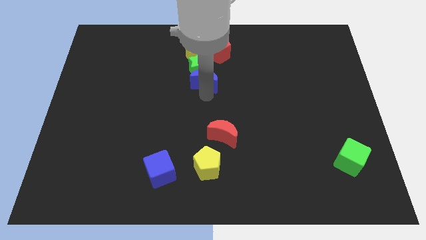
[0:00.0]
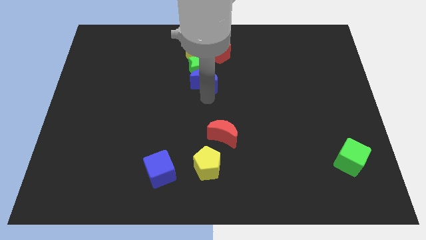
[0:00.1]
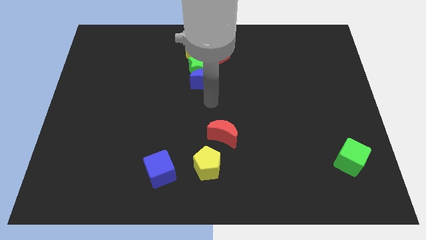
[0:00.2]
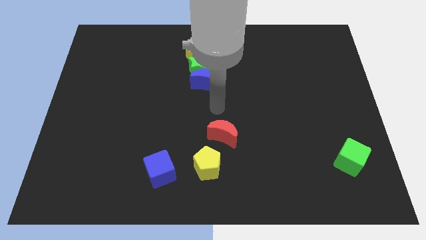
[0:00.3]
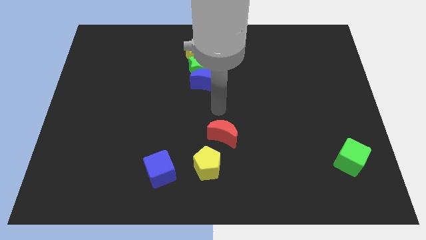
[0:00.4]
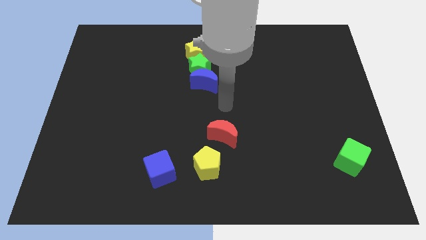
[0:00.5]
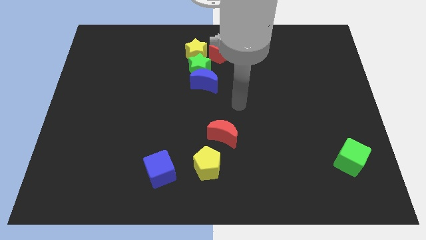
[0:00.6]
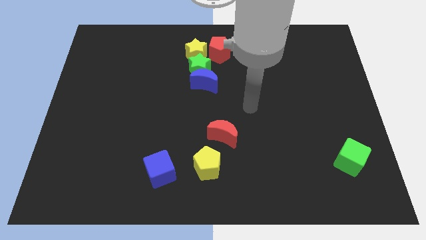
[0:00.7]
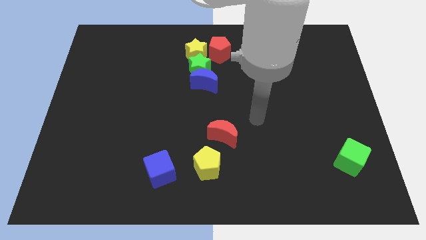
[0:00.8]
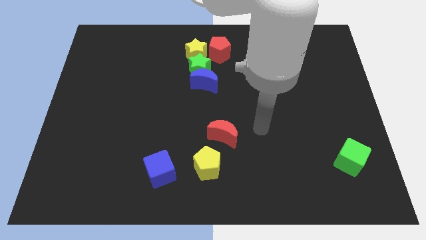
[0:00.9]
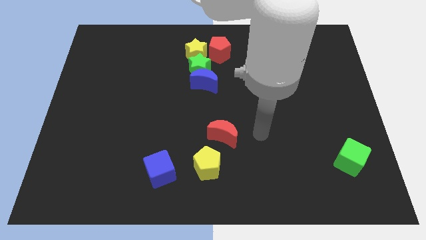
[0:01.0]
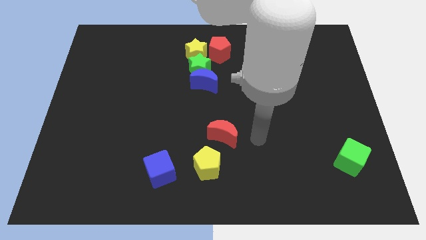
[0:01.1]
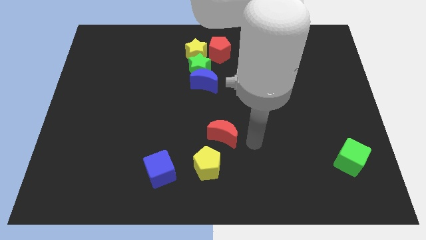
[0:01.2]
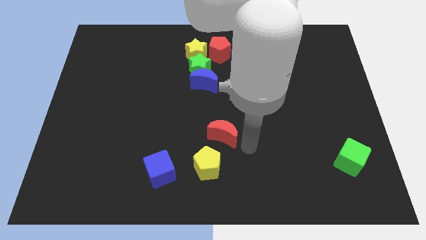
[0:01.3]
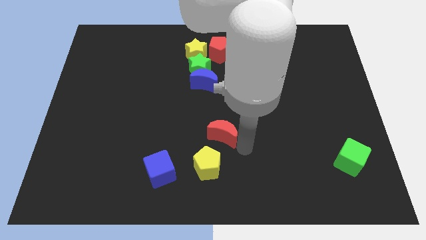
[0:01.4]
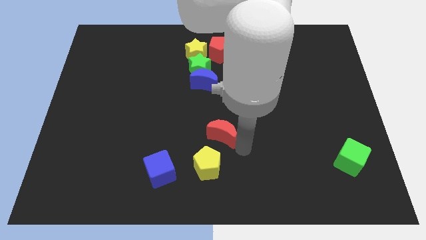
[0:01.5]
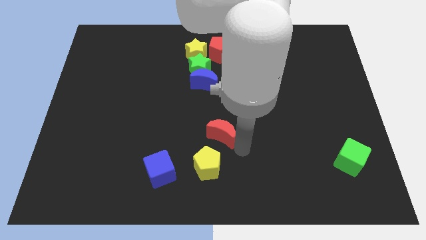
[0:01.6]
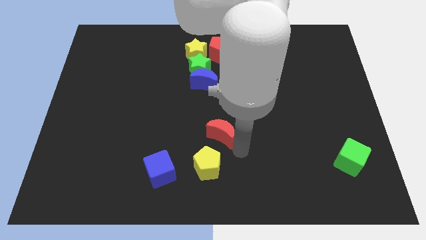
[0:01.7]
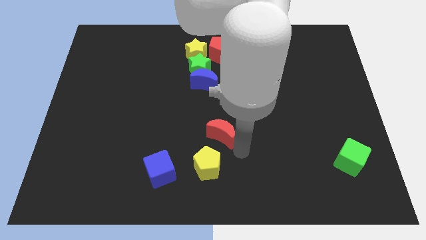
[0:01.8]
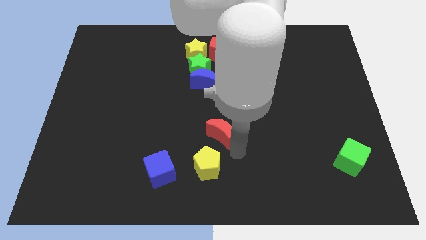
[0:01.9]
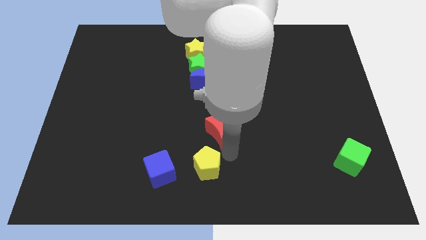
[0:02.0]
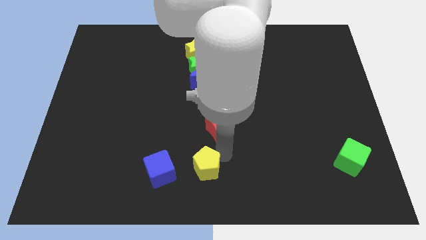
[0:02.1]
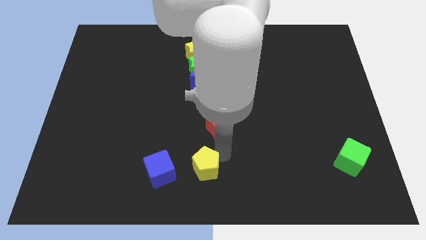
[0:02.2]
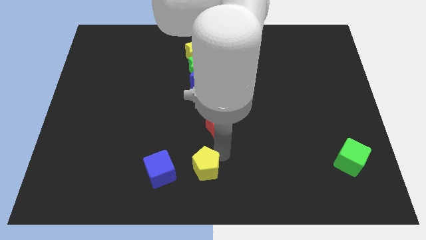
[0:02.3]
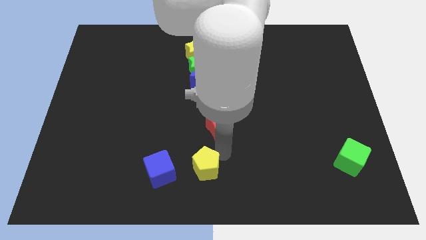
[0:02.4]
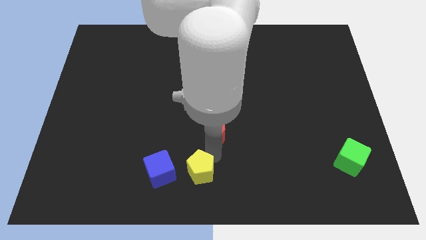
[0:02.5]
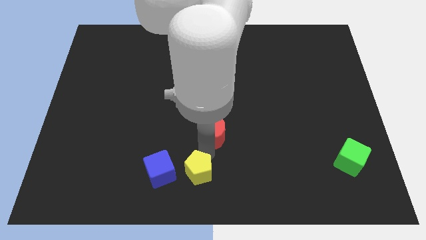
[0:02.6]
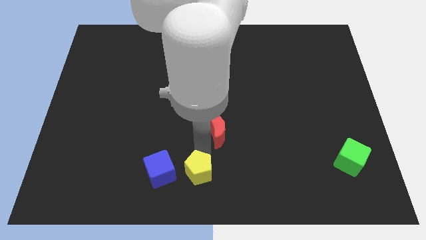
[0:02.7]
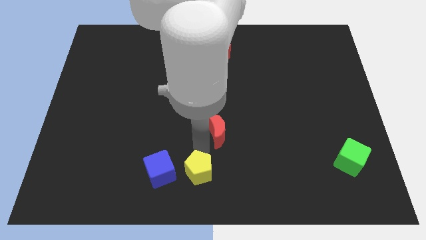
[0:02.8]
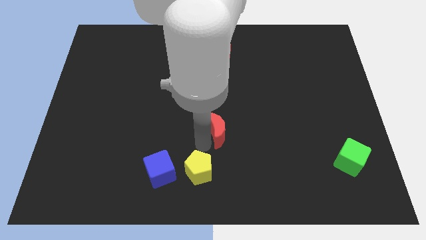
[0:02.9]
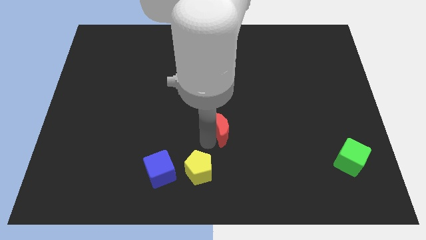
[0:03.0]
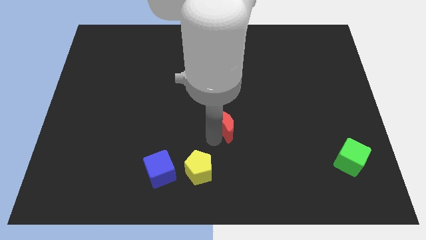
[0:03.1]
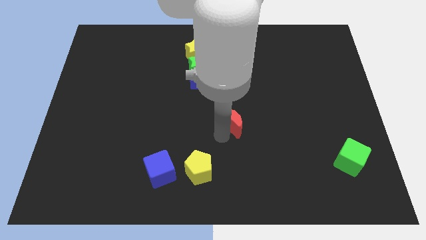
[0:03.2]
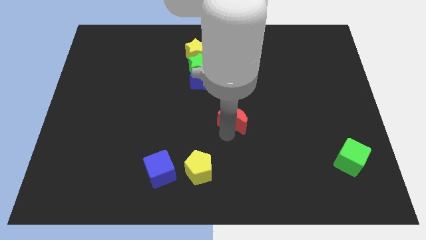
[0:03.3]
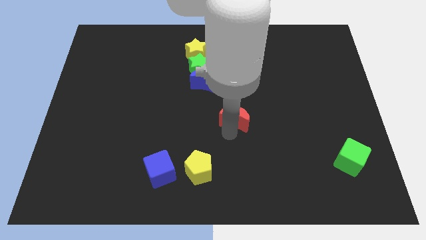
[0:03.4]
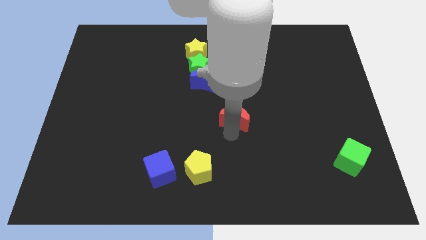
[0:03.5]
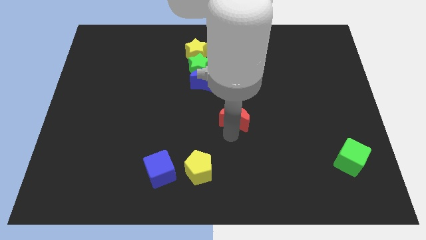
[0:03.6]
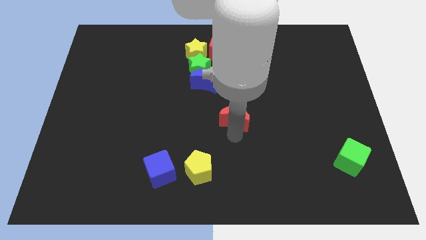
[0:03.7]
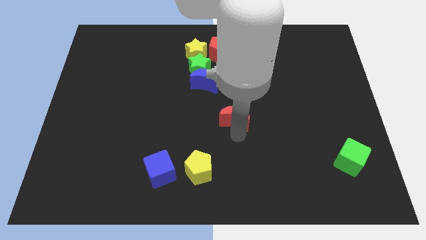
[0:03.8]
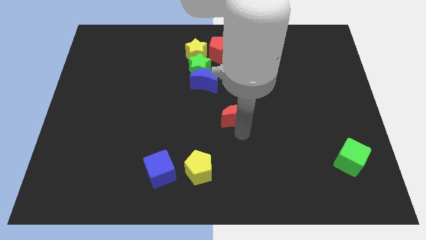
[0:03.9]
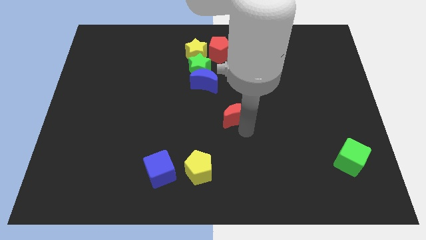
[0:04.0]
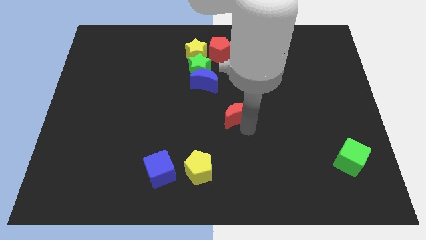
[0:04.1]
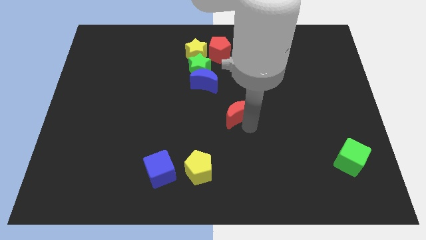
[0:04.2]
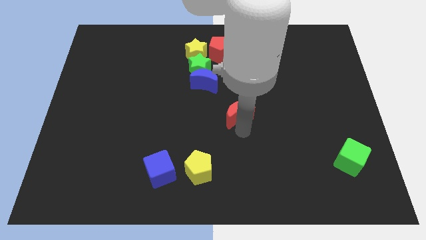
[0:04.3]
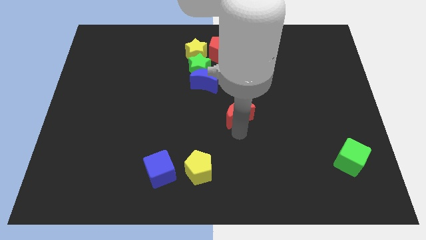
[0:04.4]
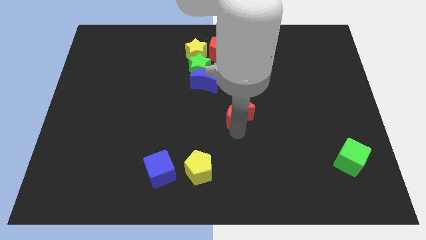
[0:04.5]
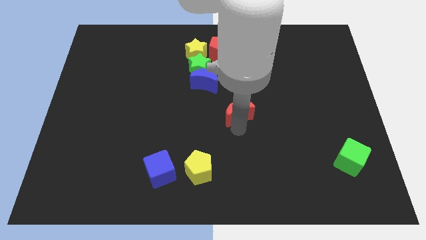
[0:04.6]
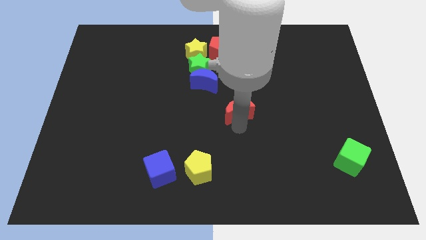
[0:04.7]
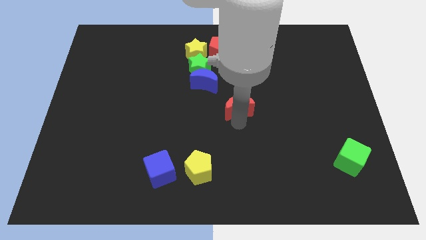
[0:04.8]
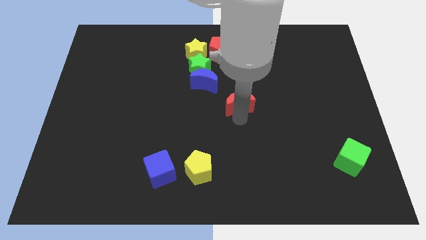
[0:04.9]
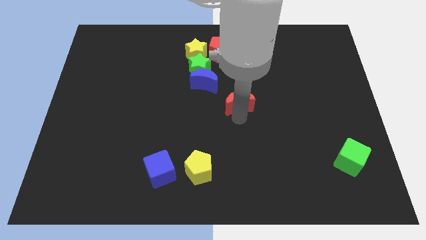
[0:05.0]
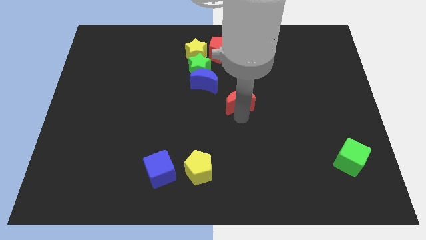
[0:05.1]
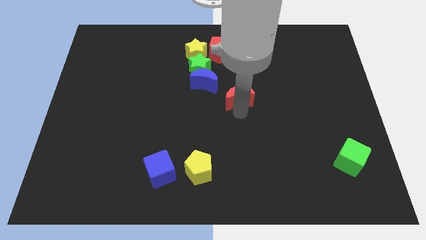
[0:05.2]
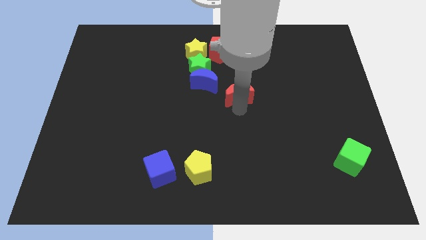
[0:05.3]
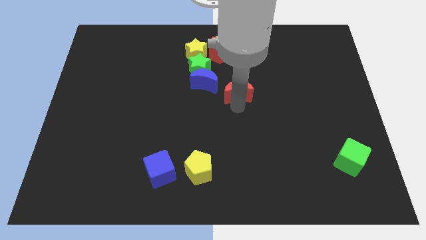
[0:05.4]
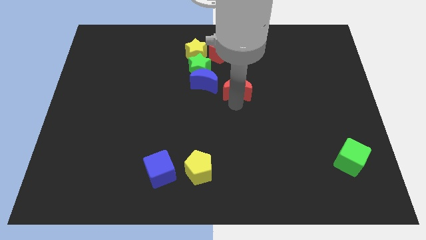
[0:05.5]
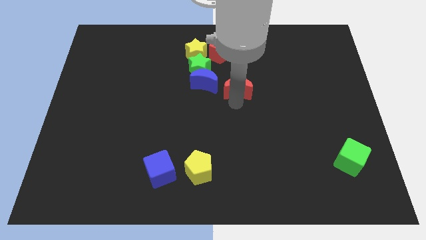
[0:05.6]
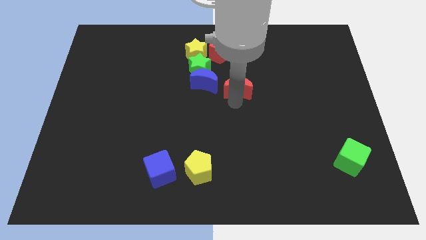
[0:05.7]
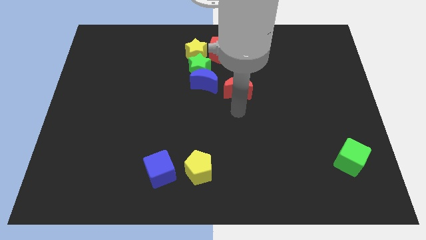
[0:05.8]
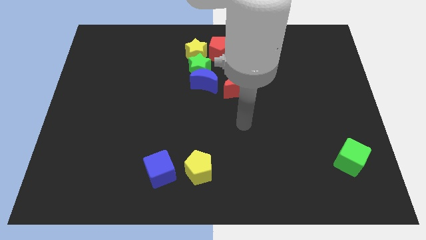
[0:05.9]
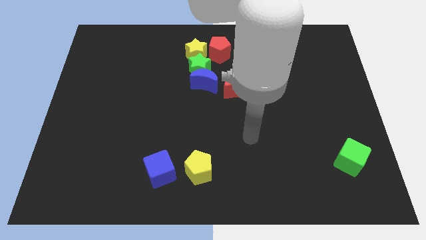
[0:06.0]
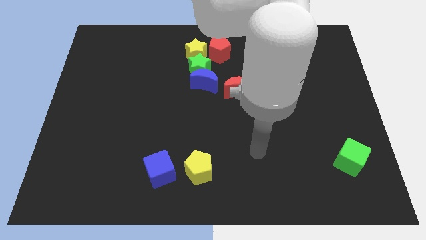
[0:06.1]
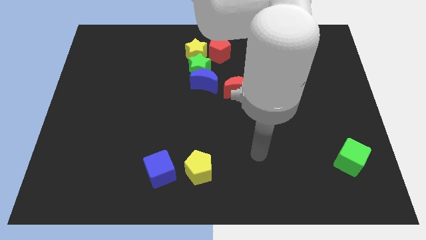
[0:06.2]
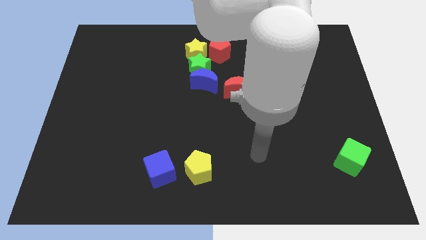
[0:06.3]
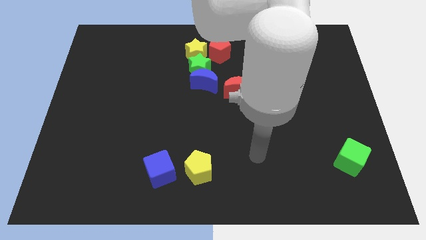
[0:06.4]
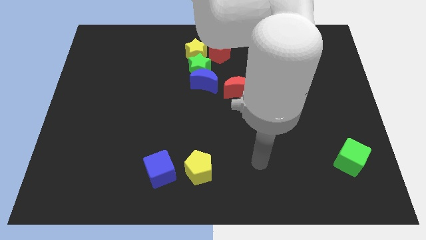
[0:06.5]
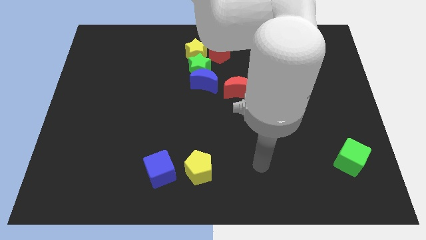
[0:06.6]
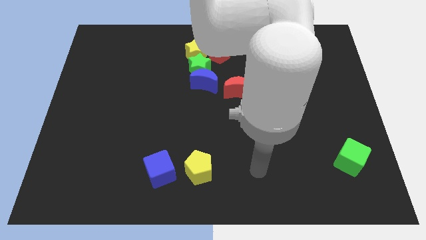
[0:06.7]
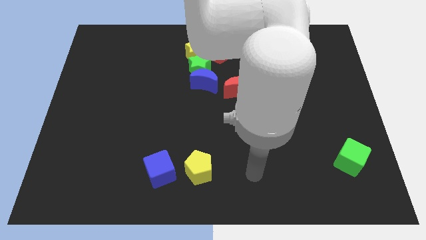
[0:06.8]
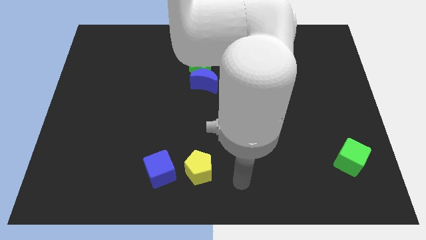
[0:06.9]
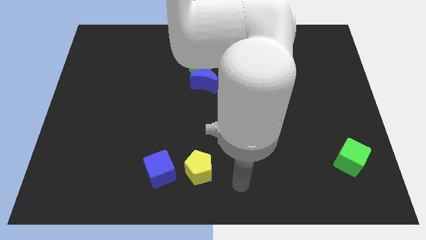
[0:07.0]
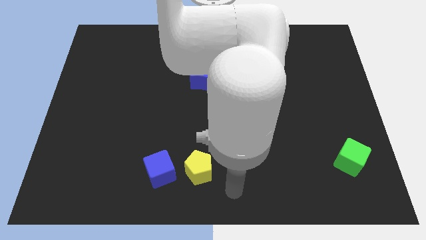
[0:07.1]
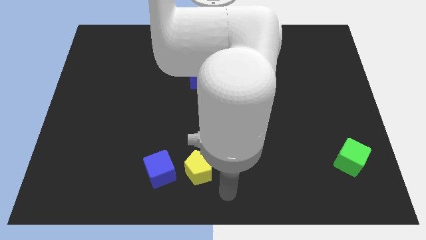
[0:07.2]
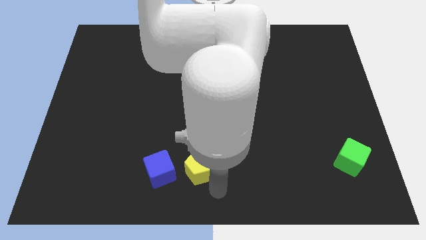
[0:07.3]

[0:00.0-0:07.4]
move red crescent to the right side of the blue crescent

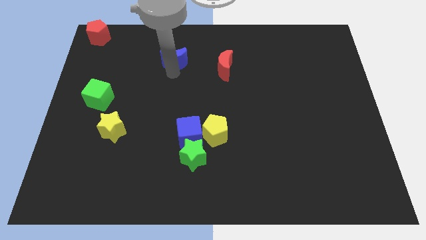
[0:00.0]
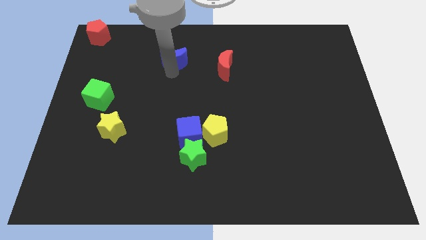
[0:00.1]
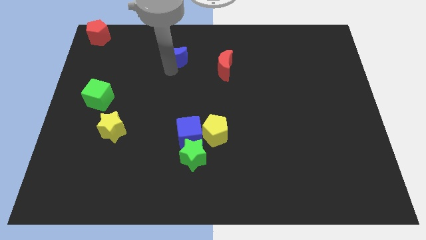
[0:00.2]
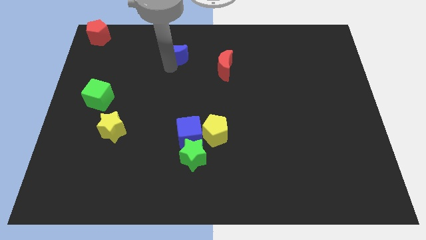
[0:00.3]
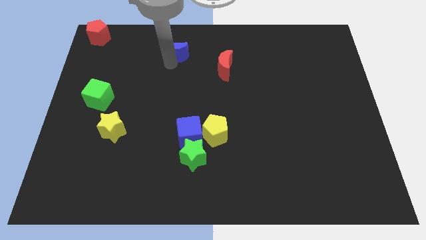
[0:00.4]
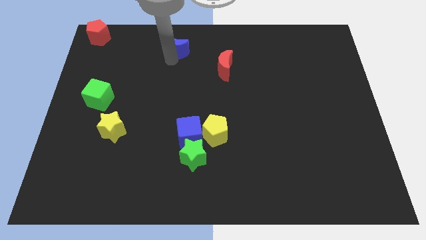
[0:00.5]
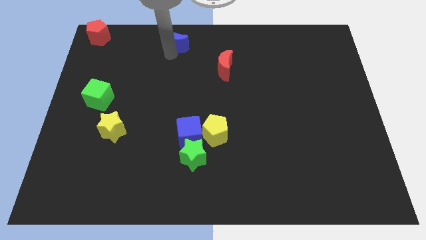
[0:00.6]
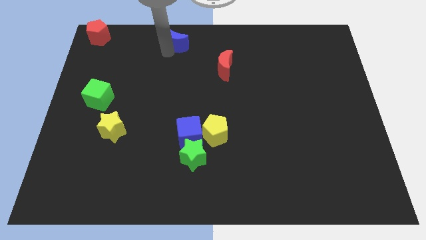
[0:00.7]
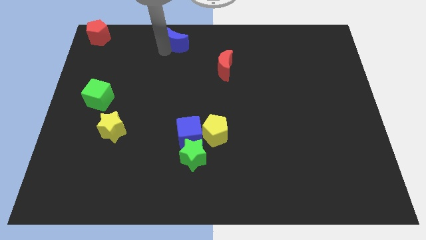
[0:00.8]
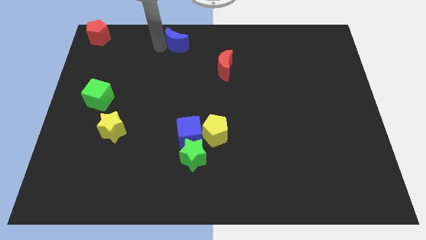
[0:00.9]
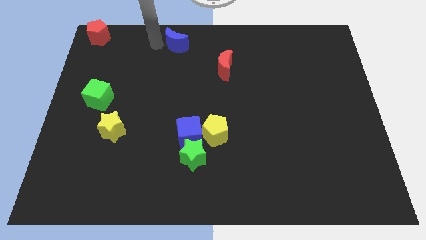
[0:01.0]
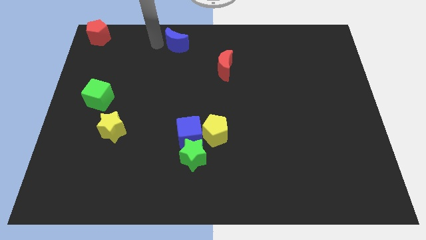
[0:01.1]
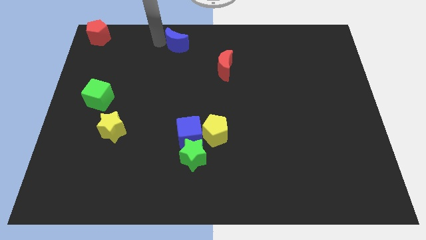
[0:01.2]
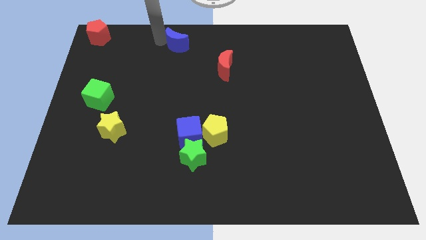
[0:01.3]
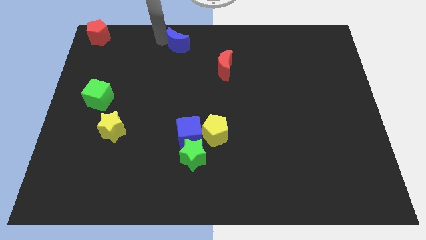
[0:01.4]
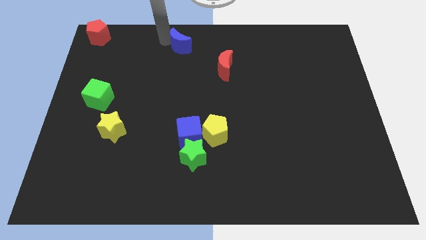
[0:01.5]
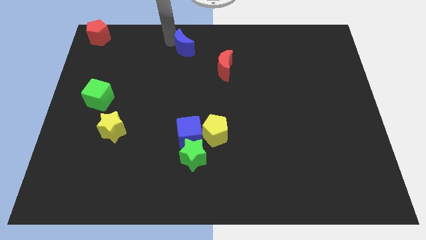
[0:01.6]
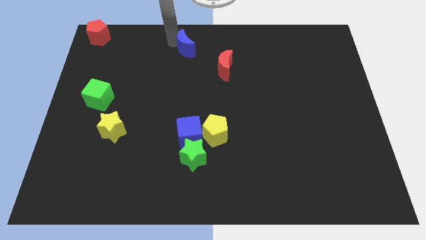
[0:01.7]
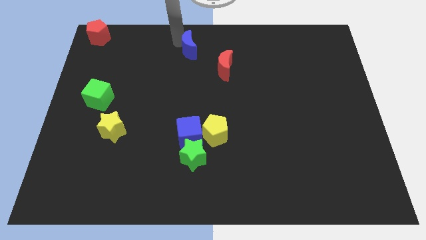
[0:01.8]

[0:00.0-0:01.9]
move blue moon towards red moon
